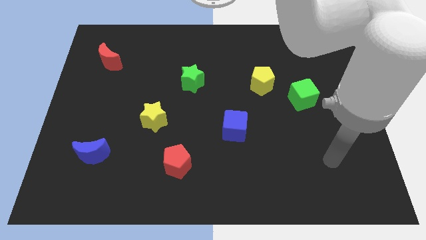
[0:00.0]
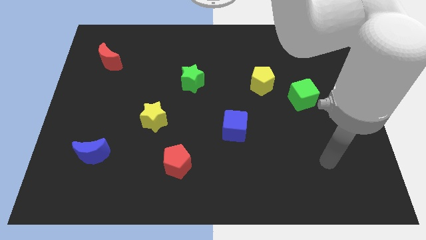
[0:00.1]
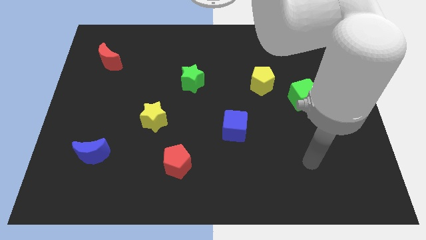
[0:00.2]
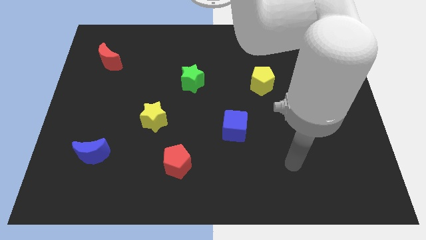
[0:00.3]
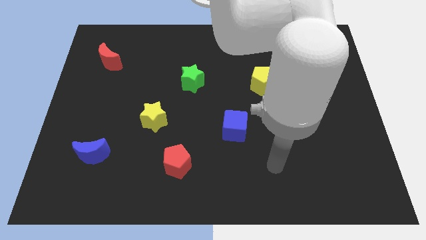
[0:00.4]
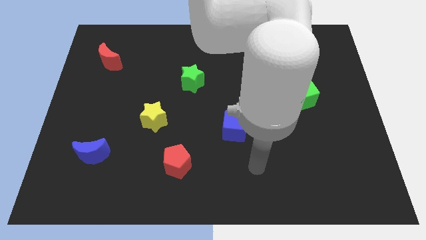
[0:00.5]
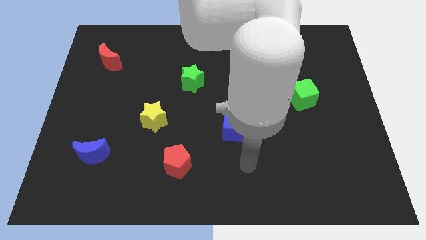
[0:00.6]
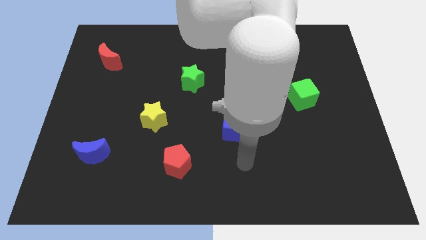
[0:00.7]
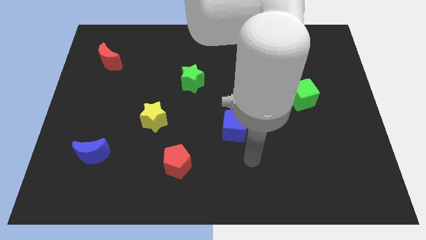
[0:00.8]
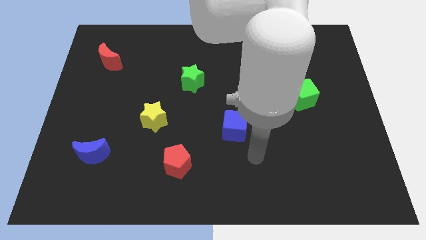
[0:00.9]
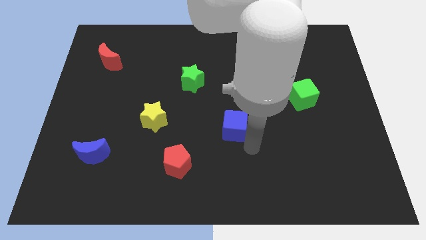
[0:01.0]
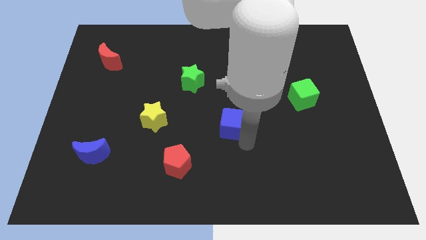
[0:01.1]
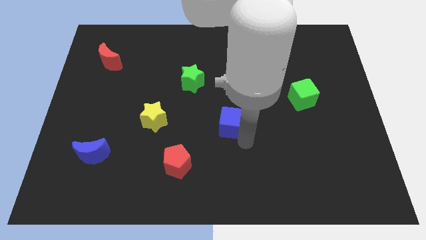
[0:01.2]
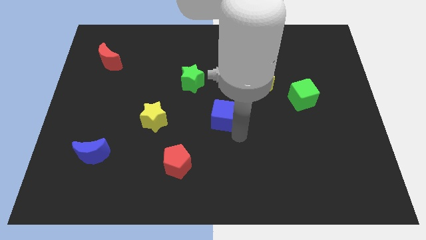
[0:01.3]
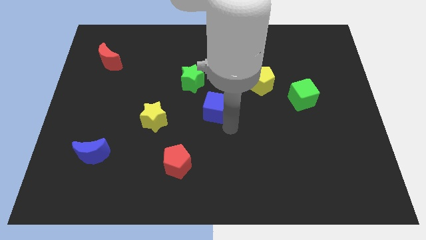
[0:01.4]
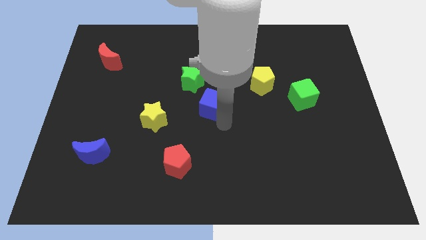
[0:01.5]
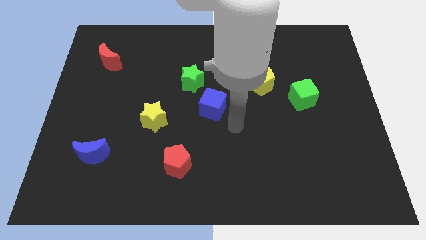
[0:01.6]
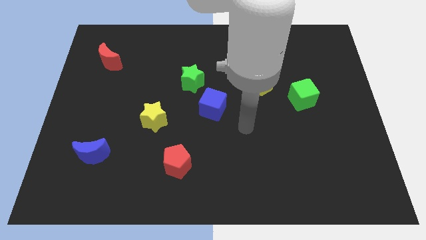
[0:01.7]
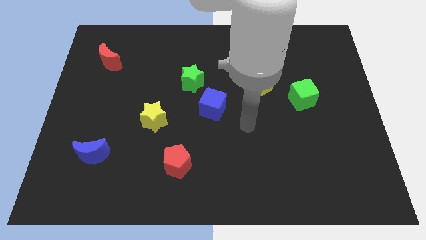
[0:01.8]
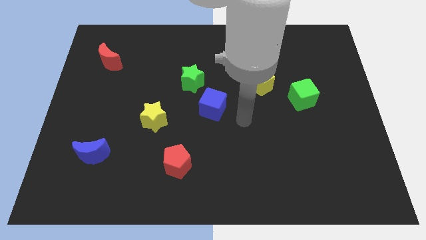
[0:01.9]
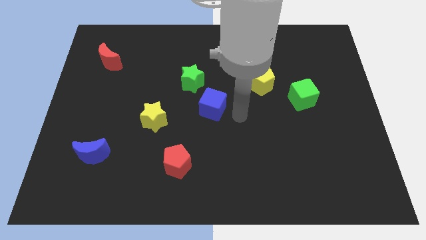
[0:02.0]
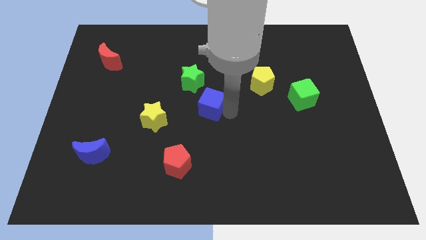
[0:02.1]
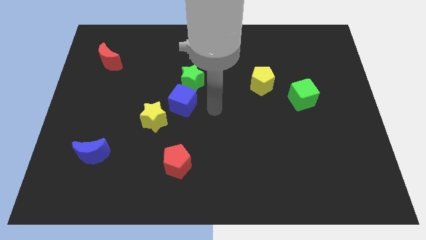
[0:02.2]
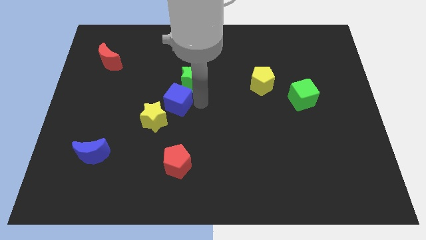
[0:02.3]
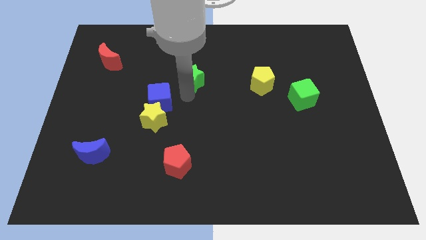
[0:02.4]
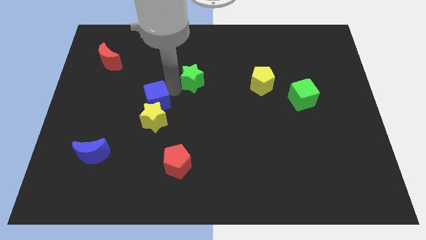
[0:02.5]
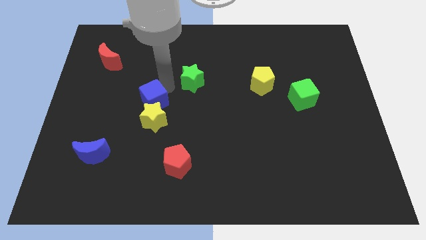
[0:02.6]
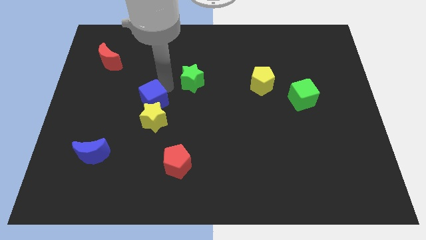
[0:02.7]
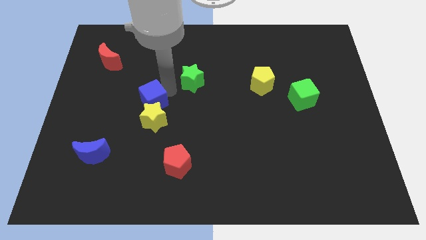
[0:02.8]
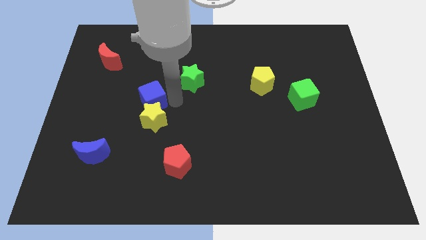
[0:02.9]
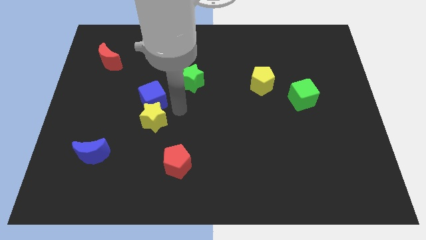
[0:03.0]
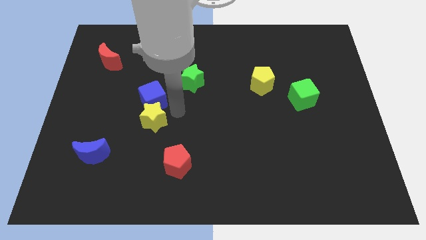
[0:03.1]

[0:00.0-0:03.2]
move the blue cube to the top of the yellow star

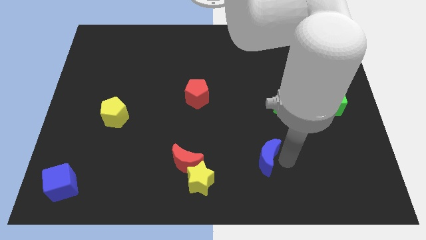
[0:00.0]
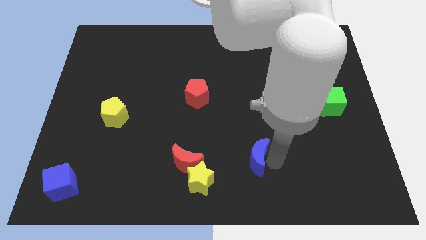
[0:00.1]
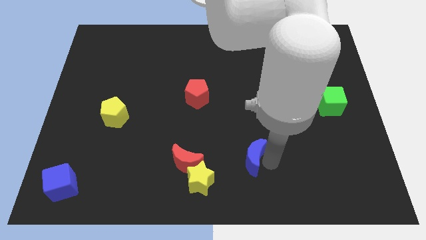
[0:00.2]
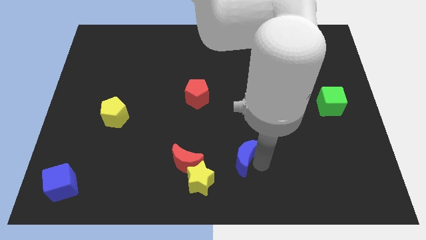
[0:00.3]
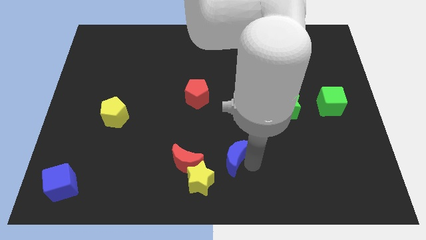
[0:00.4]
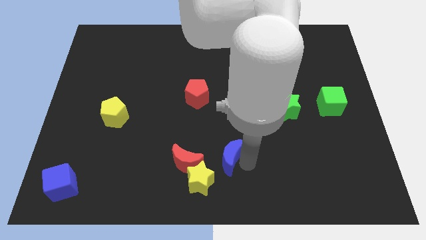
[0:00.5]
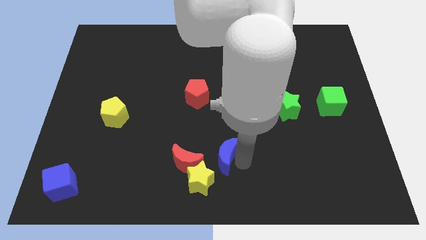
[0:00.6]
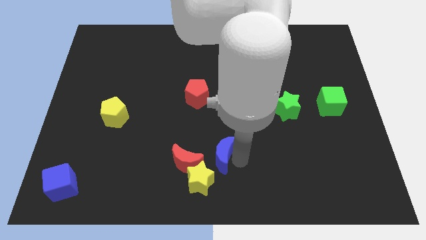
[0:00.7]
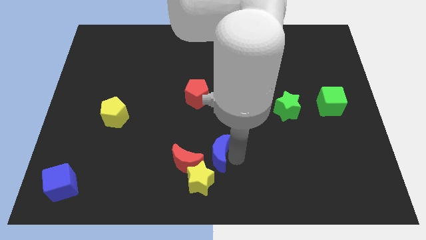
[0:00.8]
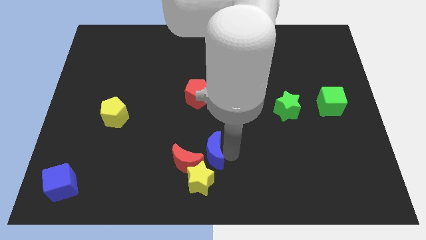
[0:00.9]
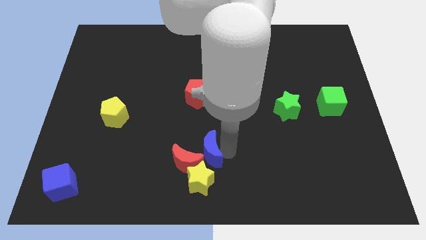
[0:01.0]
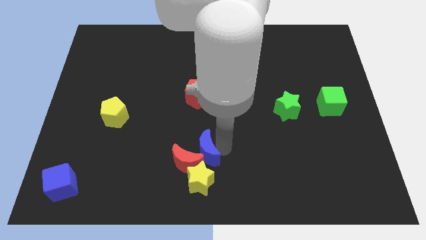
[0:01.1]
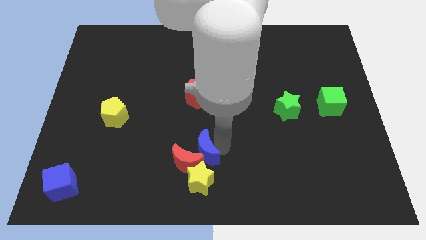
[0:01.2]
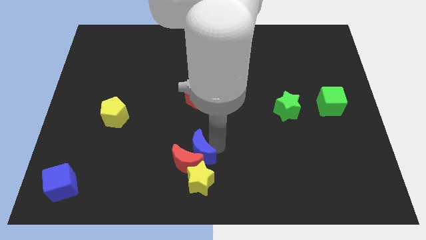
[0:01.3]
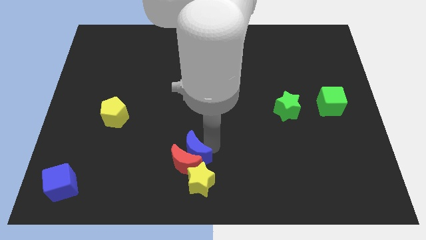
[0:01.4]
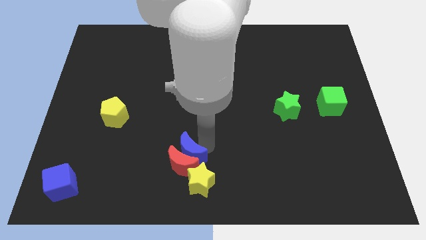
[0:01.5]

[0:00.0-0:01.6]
place the blue moon below the red pentagon

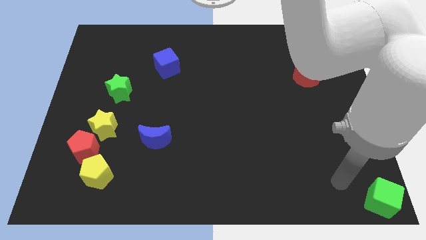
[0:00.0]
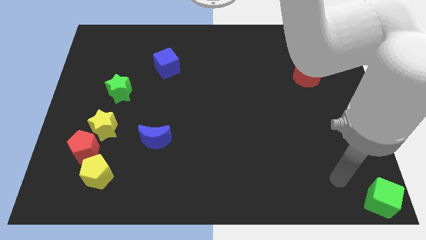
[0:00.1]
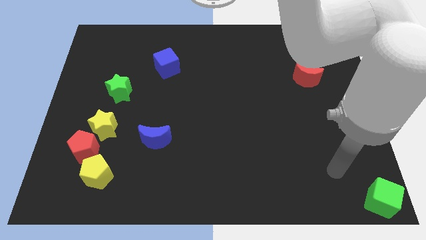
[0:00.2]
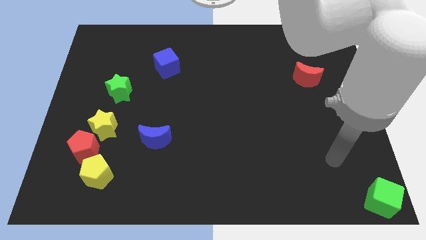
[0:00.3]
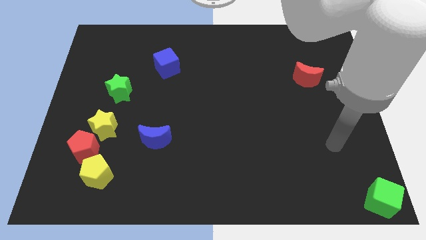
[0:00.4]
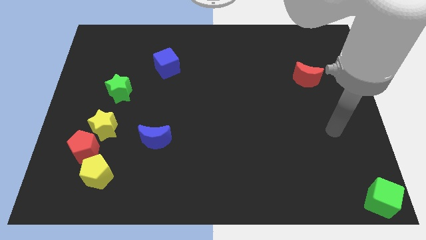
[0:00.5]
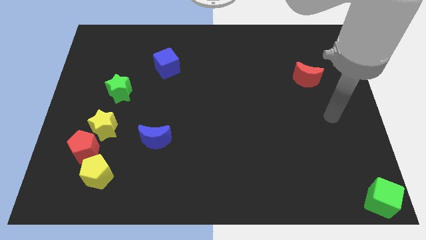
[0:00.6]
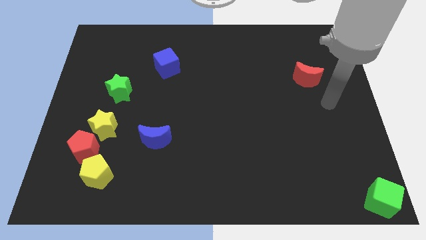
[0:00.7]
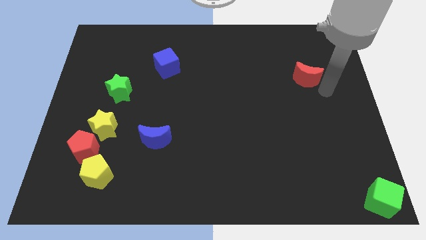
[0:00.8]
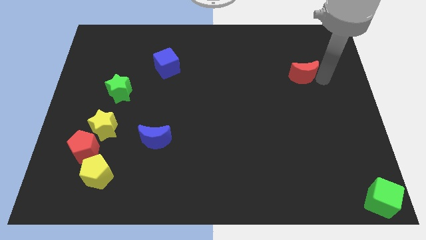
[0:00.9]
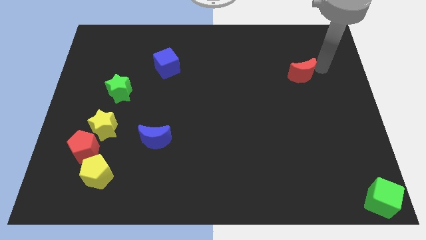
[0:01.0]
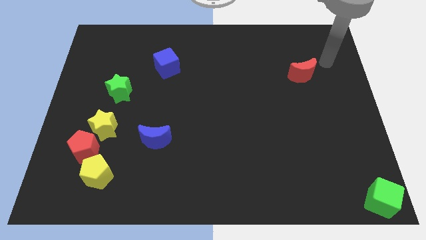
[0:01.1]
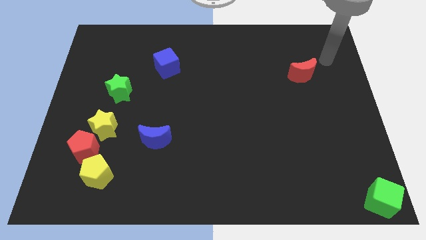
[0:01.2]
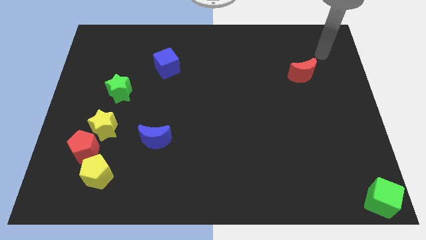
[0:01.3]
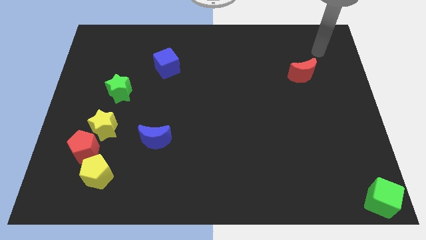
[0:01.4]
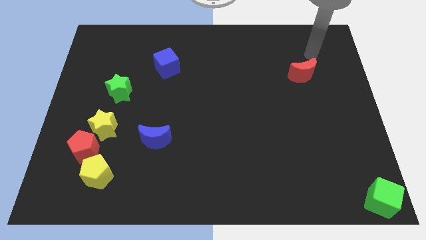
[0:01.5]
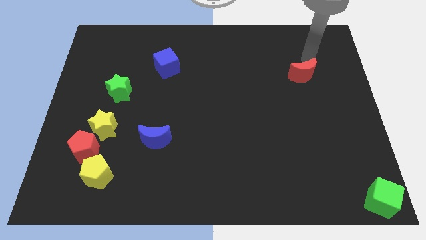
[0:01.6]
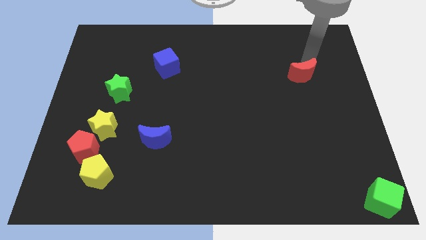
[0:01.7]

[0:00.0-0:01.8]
go near the red moon

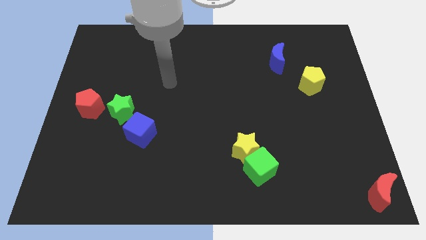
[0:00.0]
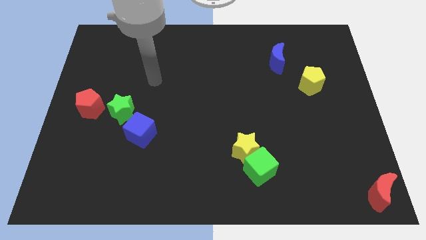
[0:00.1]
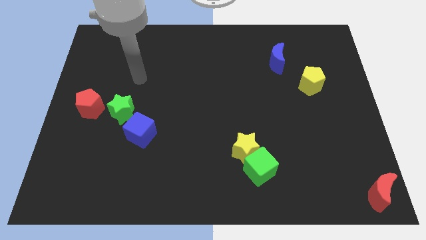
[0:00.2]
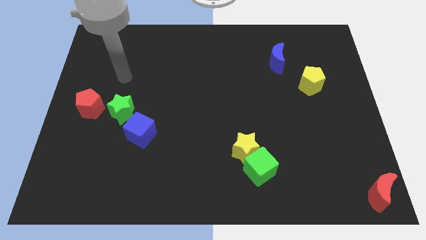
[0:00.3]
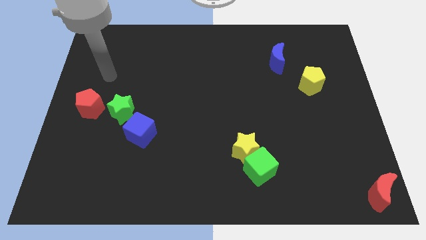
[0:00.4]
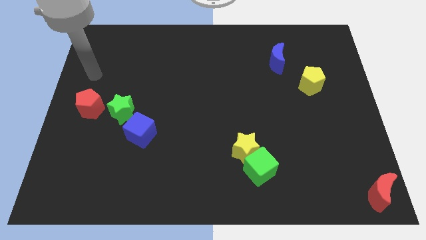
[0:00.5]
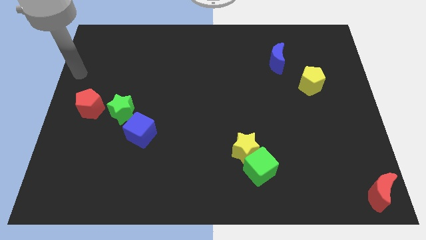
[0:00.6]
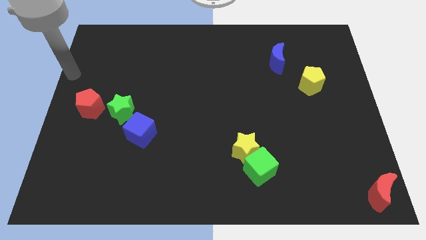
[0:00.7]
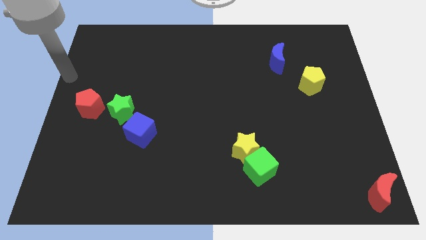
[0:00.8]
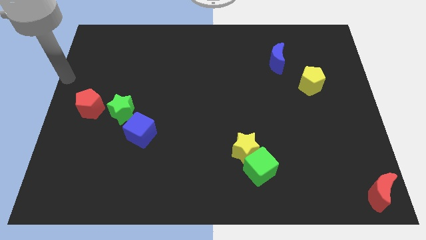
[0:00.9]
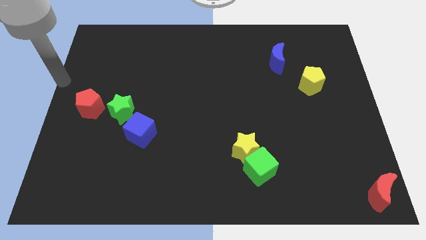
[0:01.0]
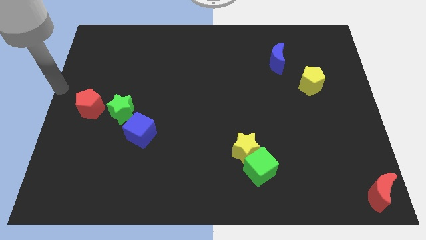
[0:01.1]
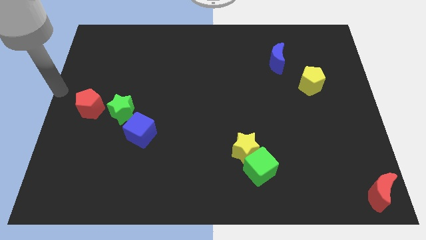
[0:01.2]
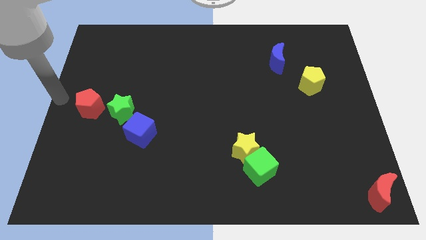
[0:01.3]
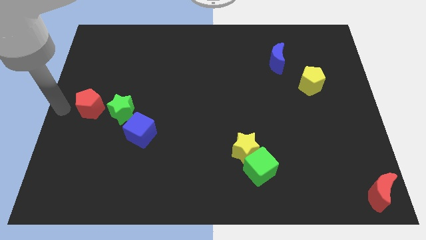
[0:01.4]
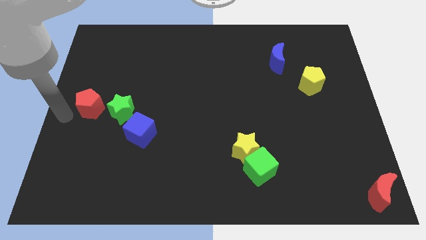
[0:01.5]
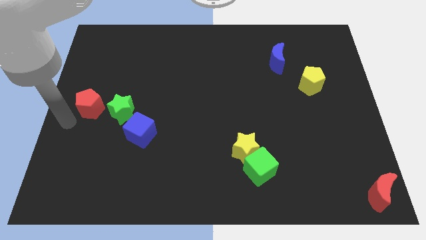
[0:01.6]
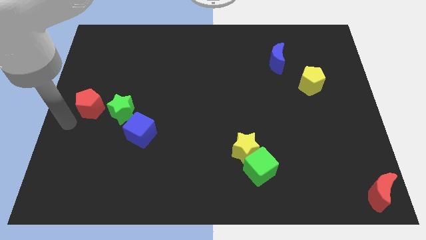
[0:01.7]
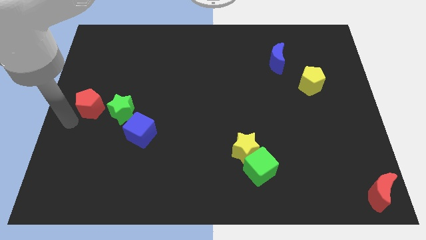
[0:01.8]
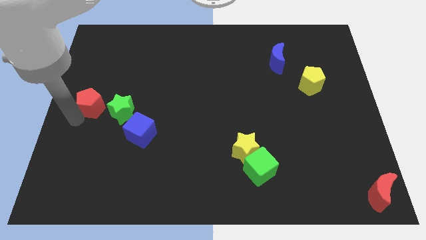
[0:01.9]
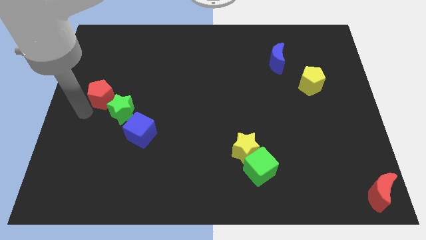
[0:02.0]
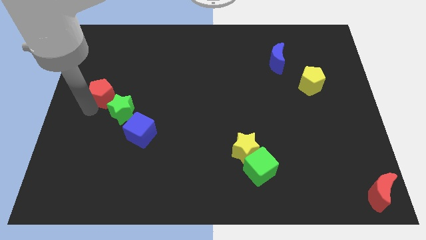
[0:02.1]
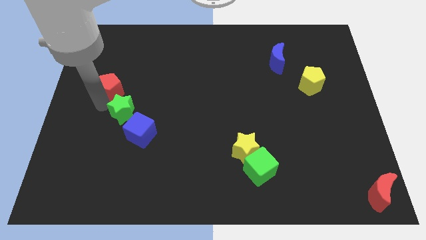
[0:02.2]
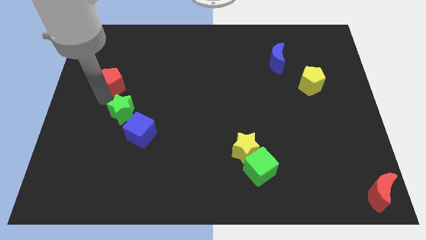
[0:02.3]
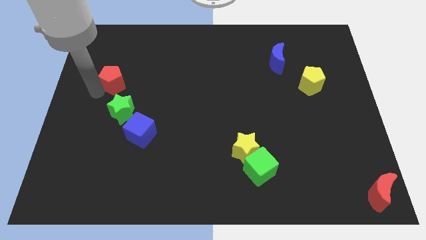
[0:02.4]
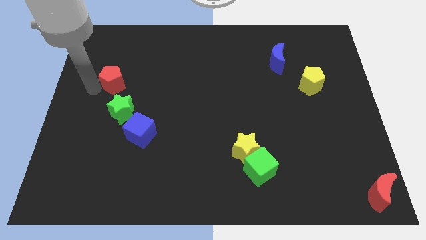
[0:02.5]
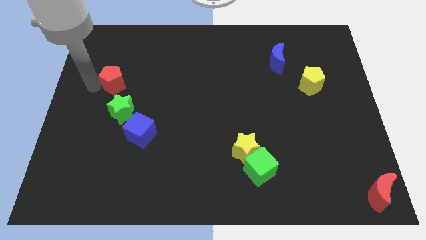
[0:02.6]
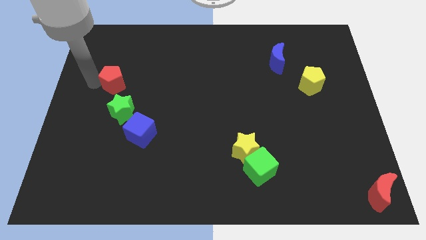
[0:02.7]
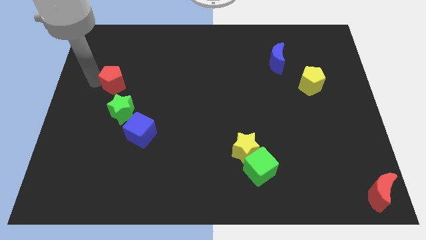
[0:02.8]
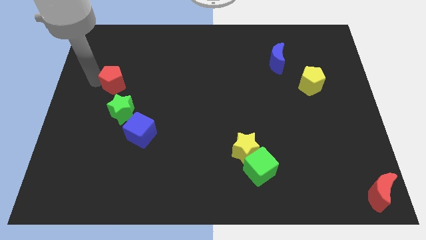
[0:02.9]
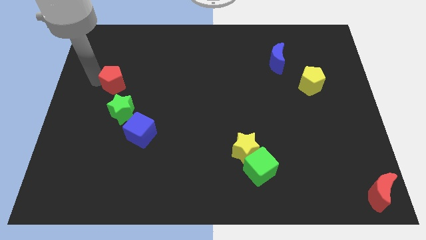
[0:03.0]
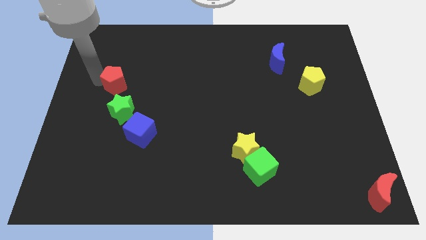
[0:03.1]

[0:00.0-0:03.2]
push red pentagon above green star
